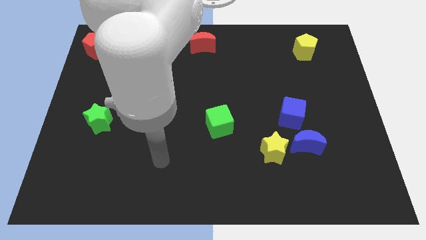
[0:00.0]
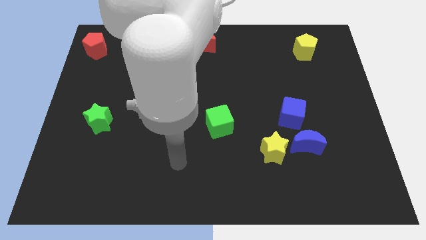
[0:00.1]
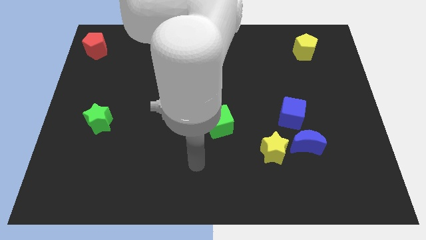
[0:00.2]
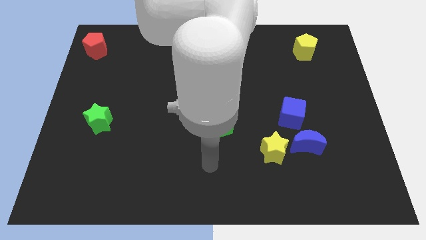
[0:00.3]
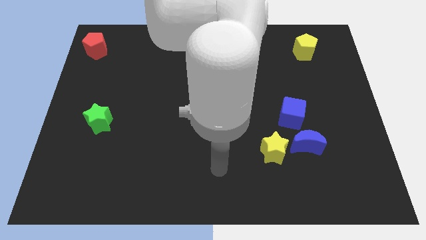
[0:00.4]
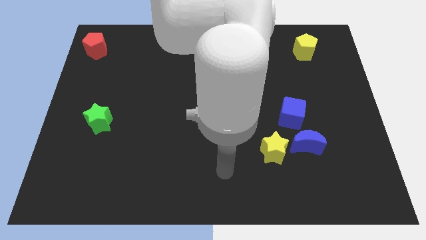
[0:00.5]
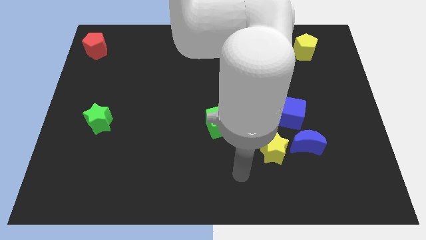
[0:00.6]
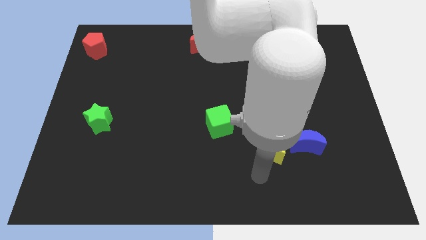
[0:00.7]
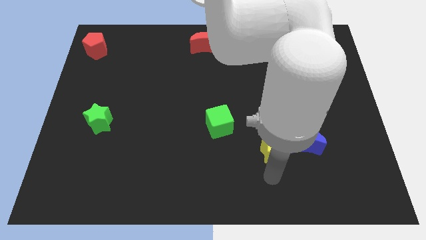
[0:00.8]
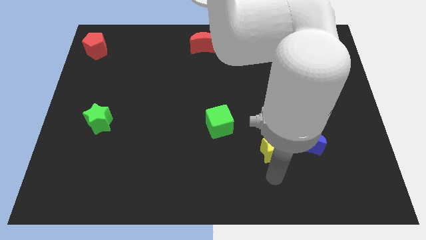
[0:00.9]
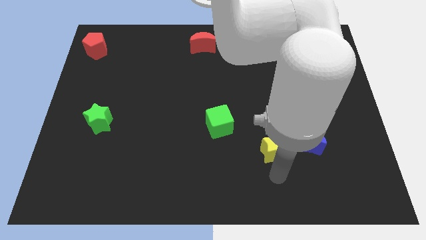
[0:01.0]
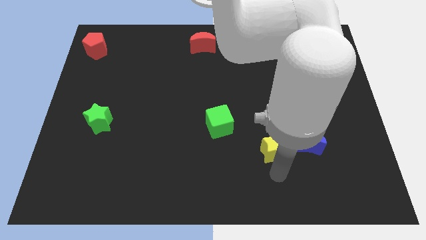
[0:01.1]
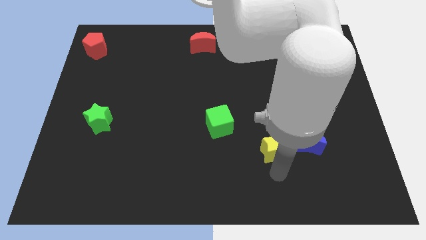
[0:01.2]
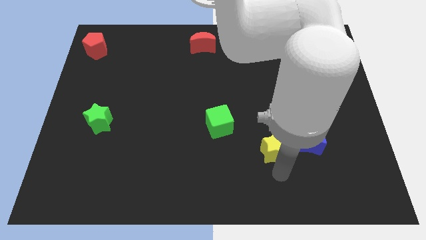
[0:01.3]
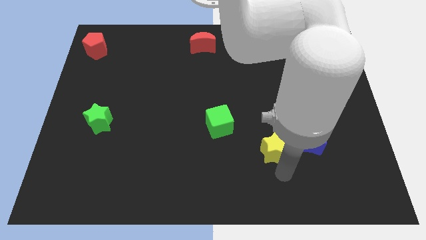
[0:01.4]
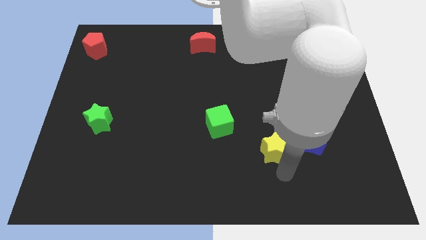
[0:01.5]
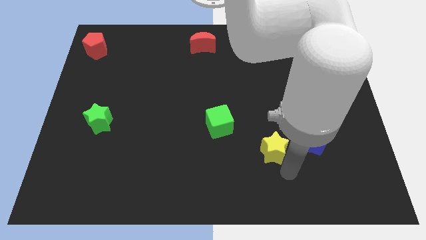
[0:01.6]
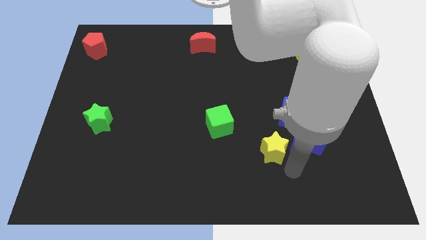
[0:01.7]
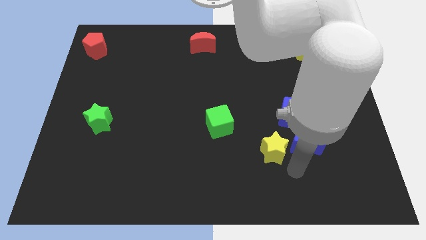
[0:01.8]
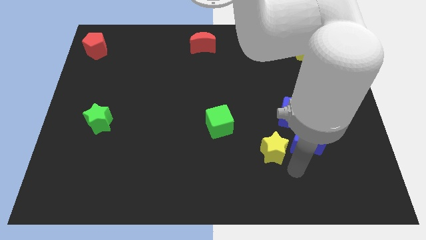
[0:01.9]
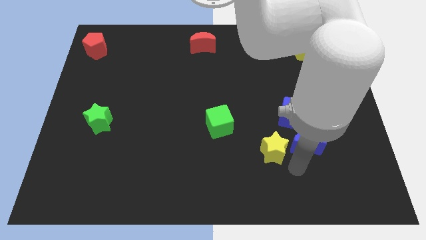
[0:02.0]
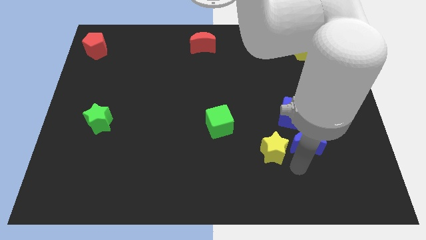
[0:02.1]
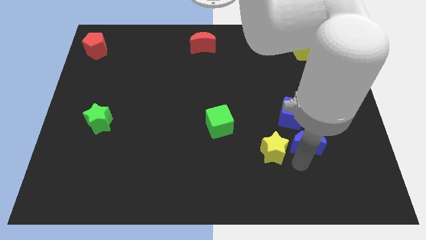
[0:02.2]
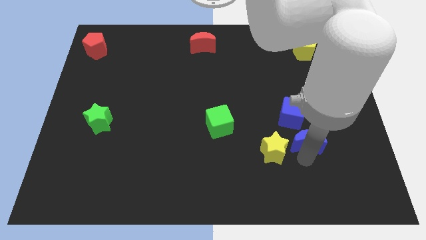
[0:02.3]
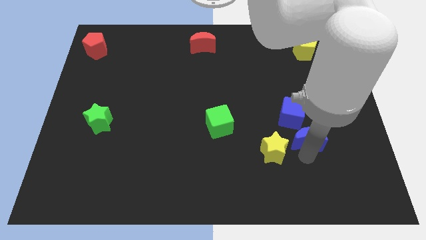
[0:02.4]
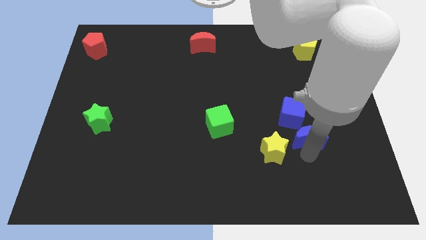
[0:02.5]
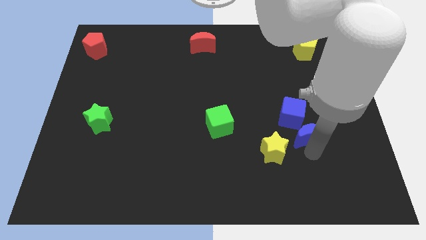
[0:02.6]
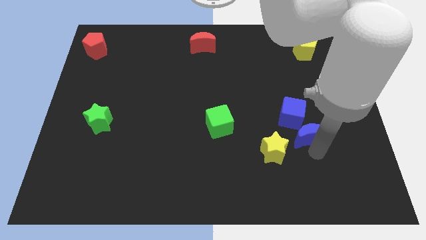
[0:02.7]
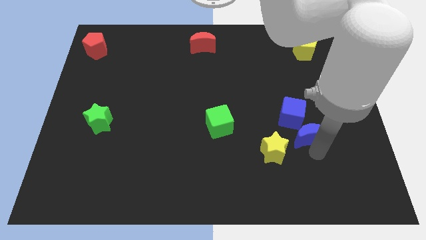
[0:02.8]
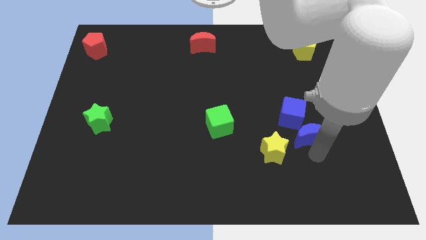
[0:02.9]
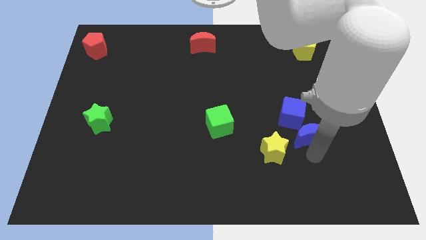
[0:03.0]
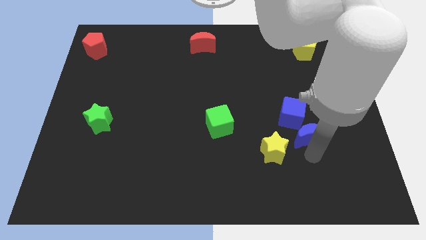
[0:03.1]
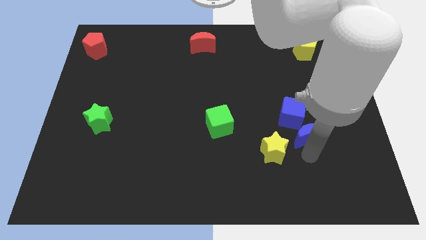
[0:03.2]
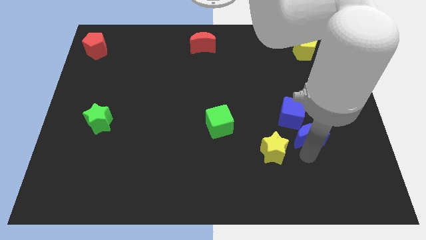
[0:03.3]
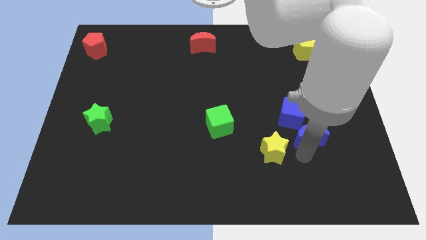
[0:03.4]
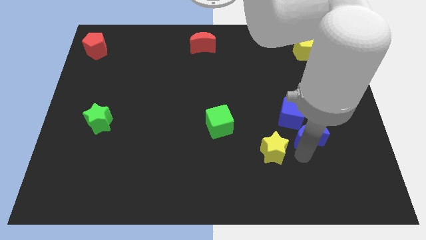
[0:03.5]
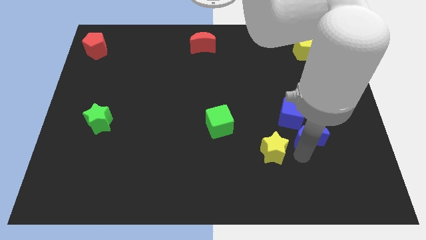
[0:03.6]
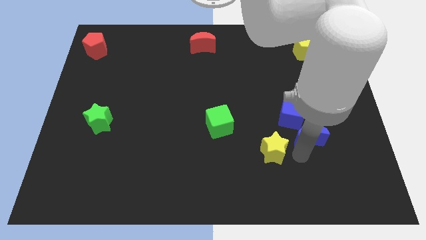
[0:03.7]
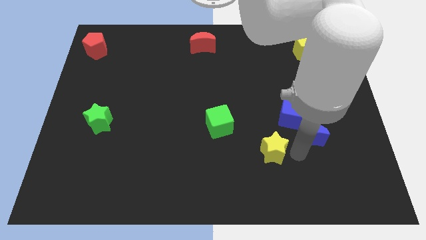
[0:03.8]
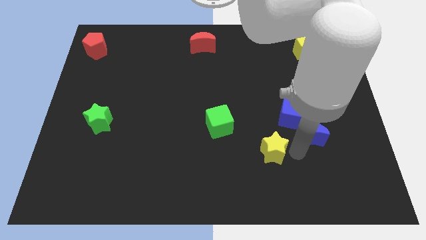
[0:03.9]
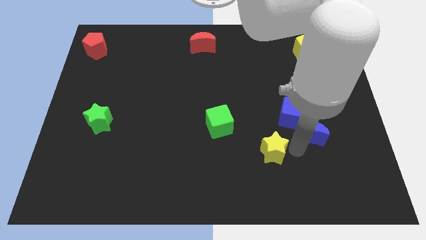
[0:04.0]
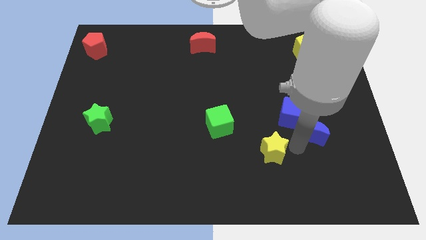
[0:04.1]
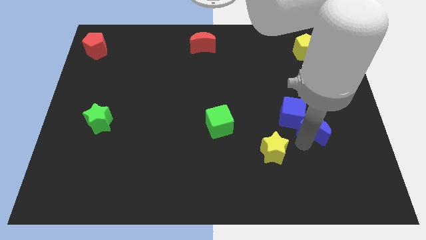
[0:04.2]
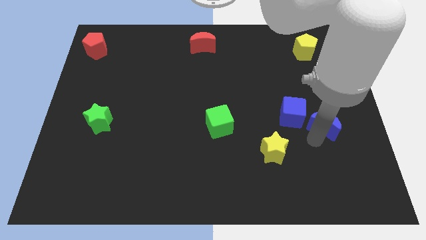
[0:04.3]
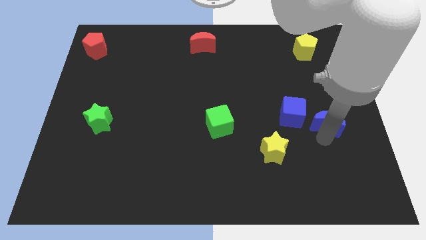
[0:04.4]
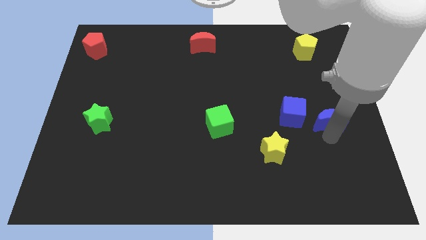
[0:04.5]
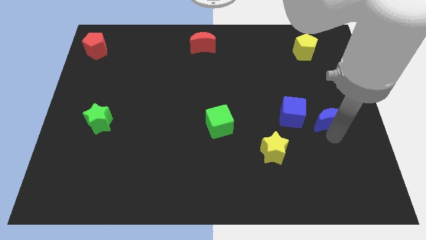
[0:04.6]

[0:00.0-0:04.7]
separate the blue crescent from the yellow star

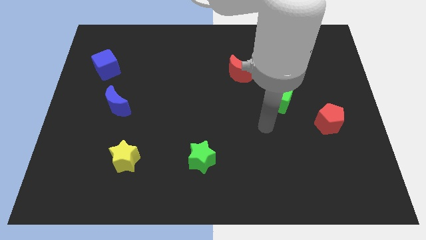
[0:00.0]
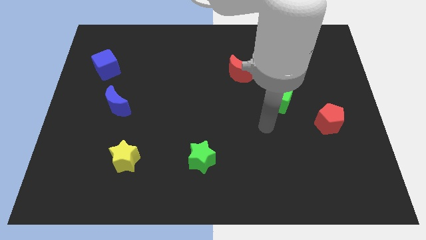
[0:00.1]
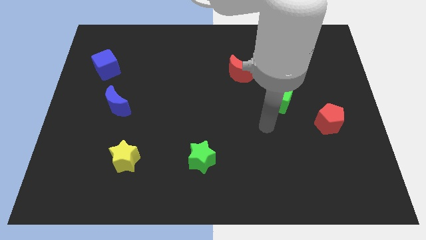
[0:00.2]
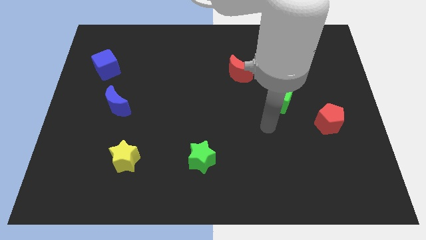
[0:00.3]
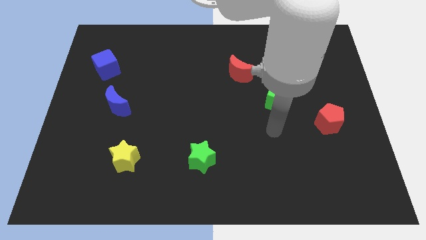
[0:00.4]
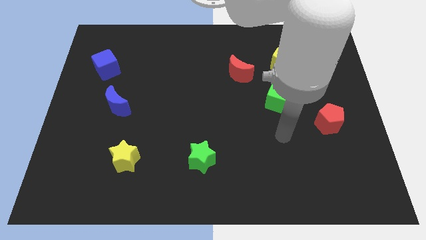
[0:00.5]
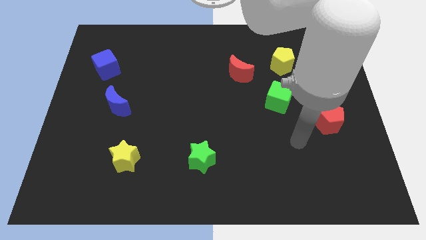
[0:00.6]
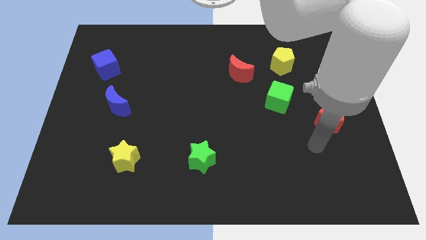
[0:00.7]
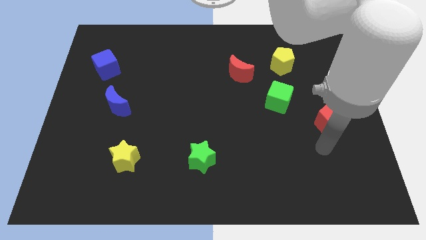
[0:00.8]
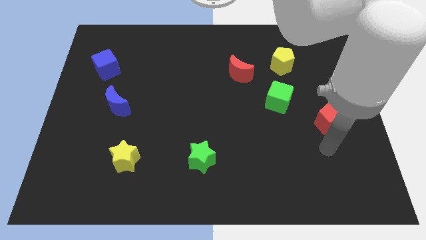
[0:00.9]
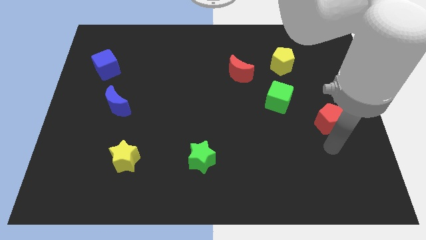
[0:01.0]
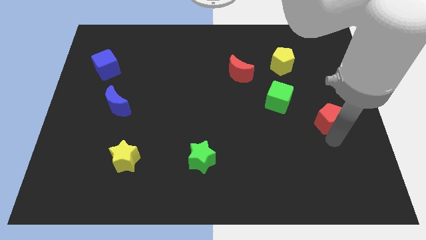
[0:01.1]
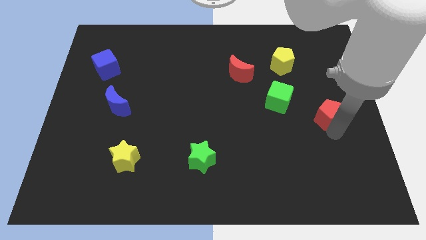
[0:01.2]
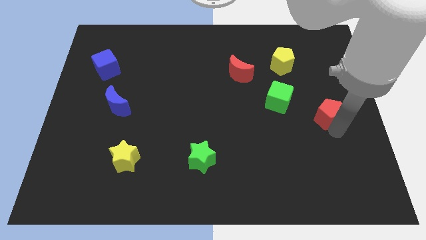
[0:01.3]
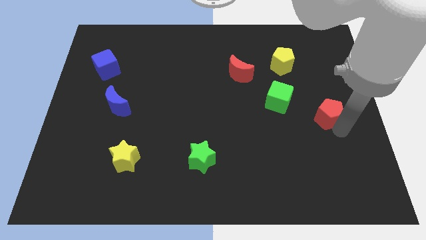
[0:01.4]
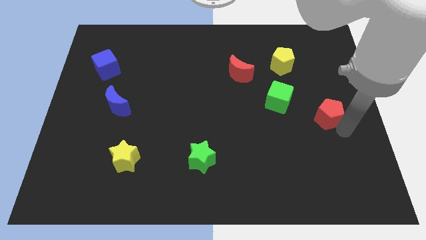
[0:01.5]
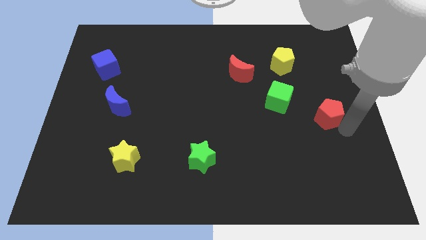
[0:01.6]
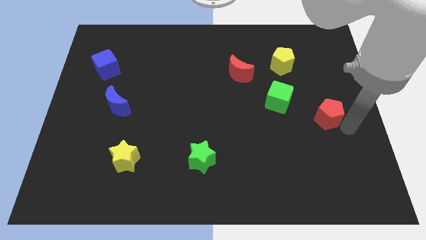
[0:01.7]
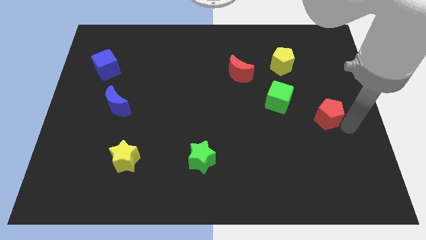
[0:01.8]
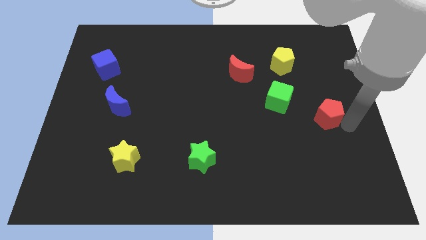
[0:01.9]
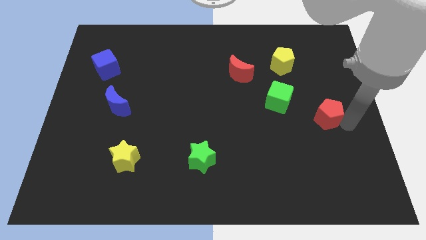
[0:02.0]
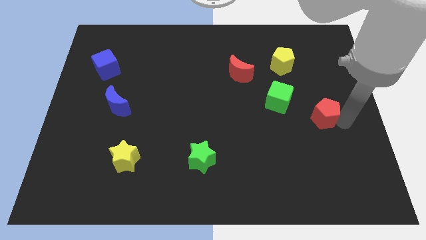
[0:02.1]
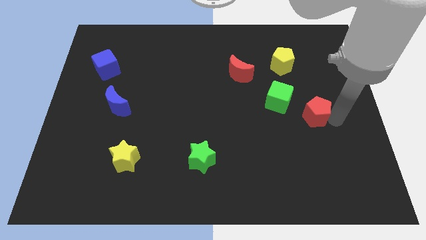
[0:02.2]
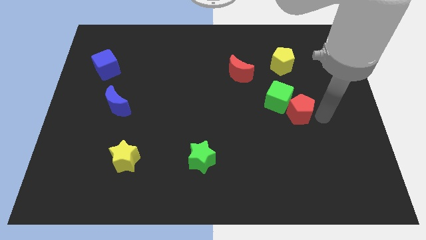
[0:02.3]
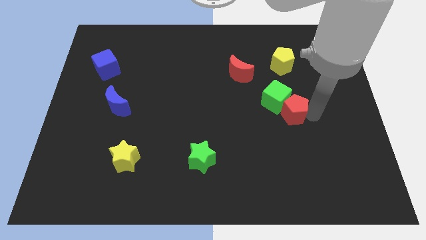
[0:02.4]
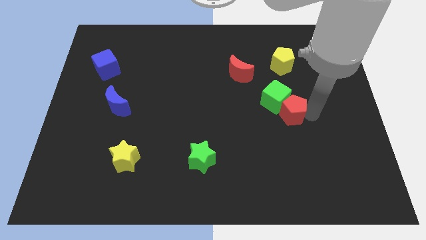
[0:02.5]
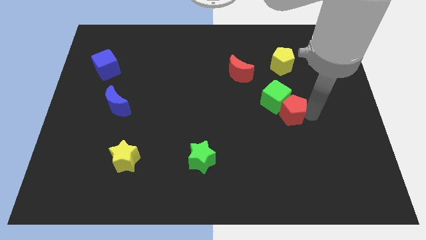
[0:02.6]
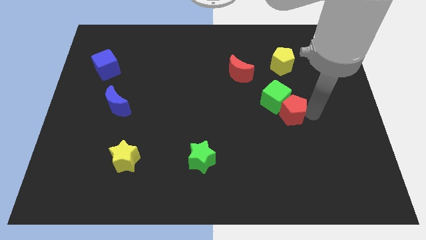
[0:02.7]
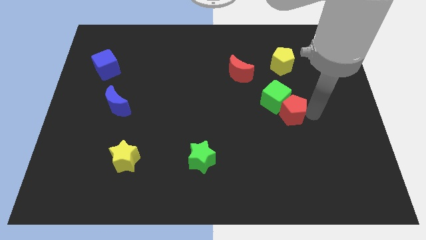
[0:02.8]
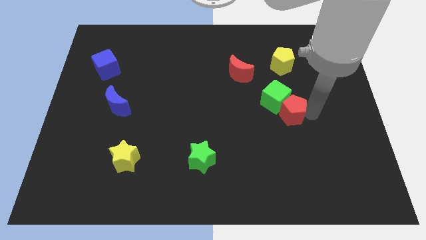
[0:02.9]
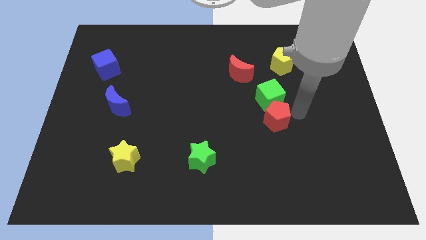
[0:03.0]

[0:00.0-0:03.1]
push the red pentagon into the green cube

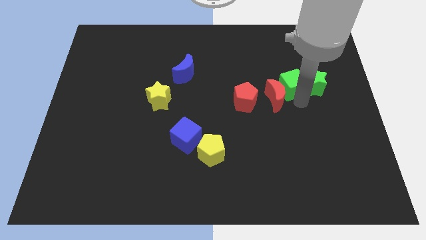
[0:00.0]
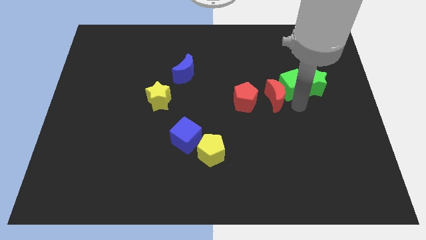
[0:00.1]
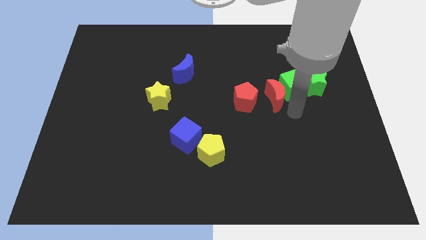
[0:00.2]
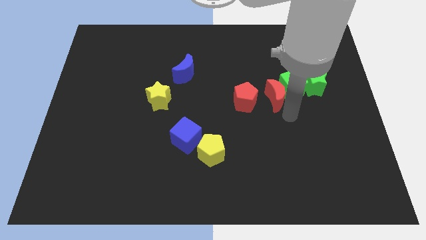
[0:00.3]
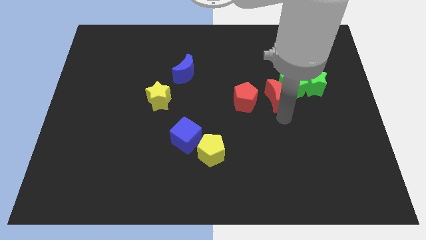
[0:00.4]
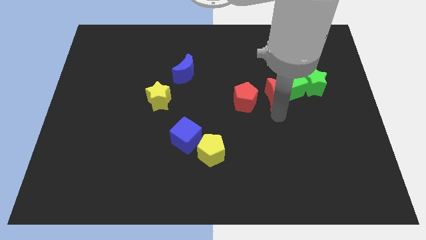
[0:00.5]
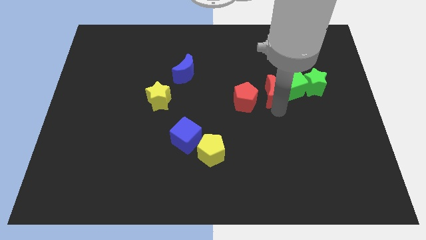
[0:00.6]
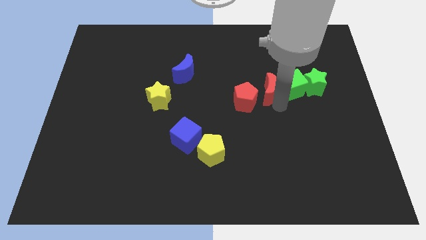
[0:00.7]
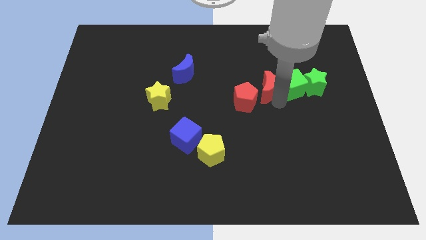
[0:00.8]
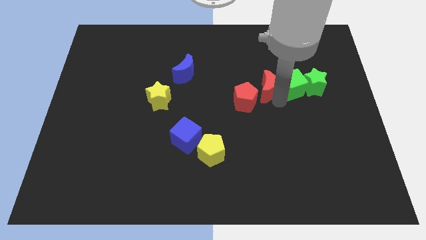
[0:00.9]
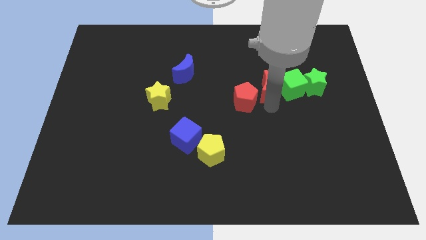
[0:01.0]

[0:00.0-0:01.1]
move the red moon on the left side of the green cube
